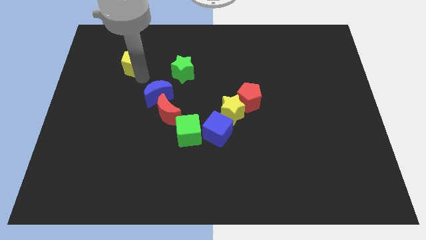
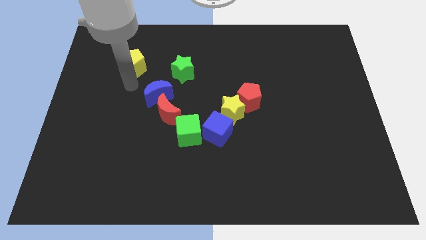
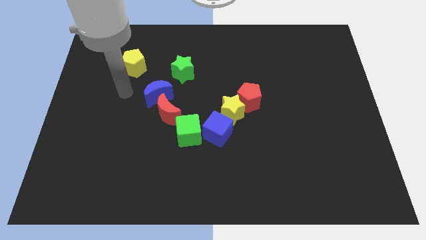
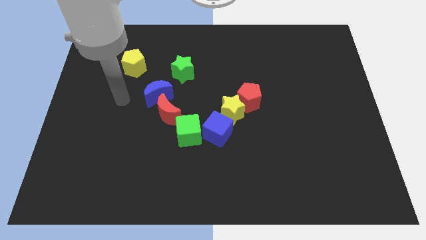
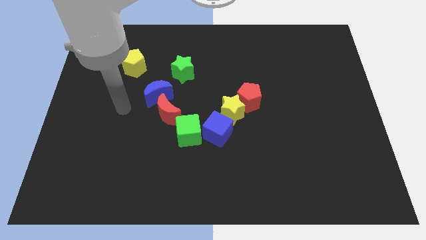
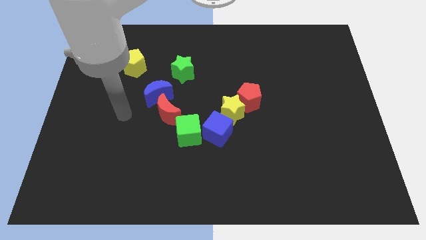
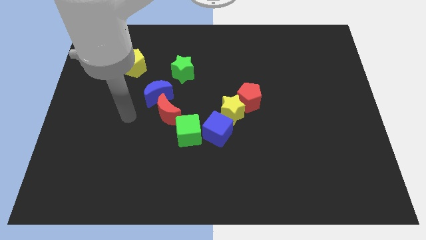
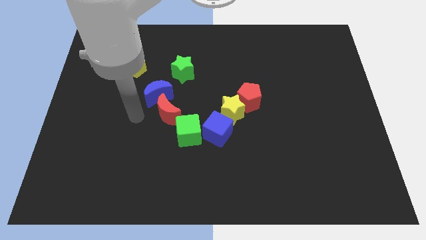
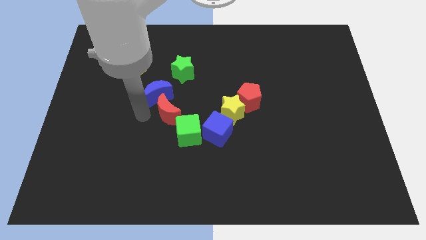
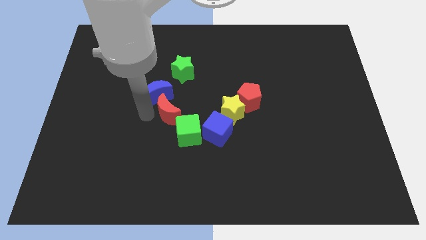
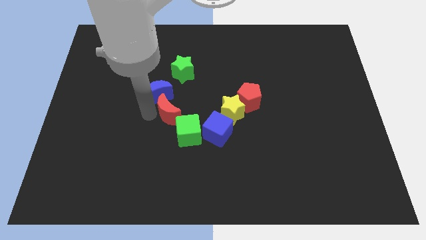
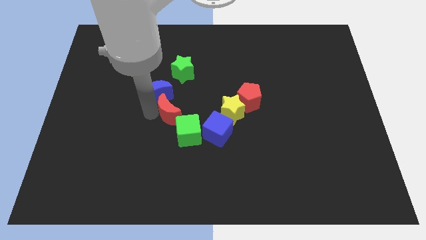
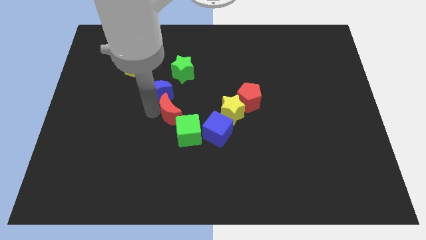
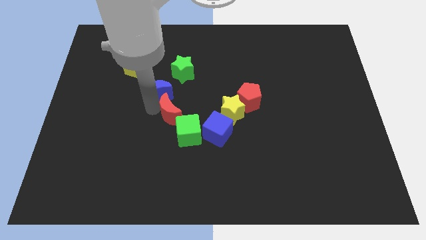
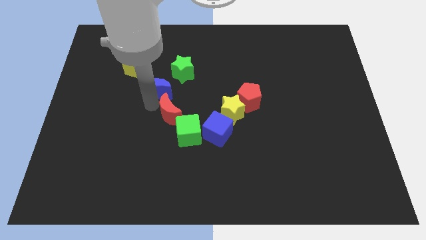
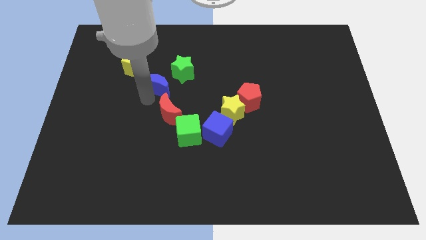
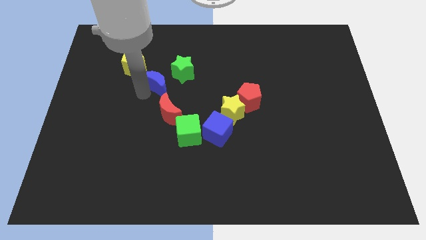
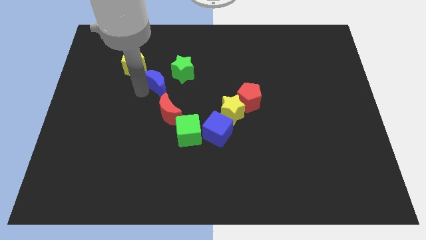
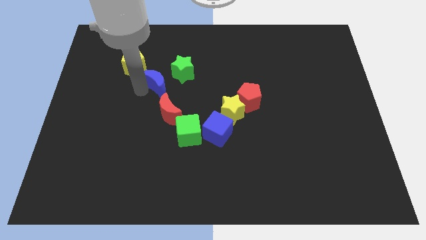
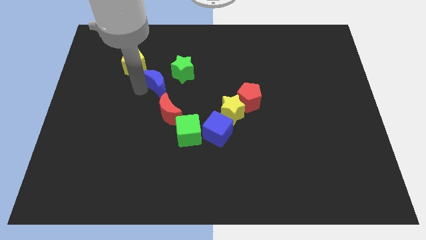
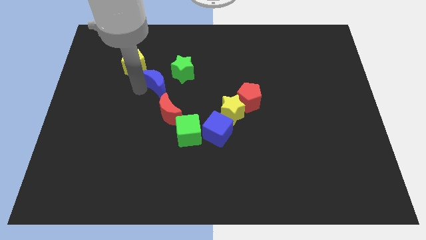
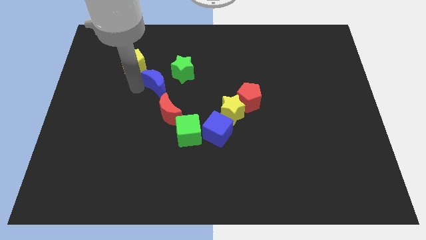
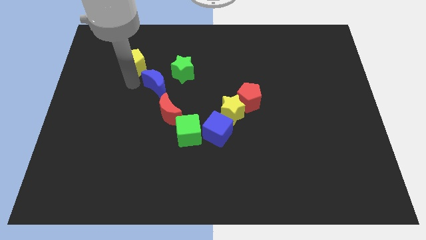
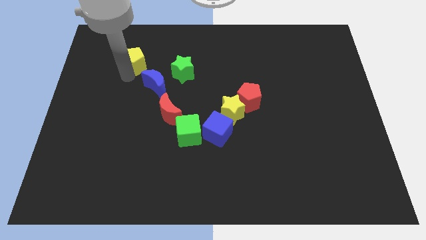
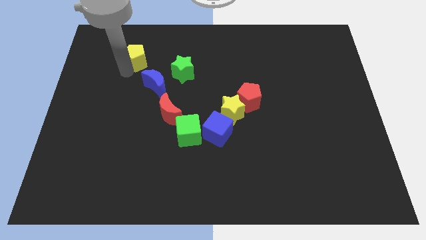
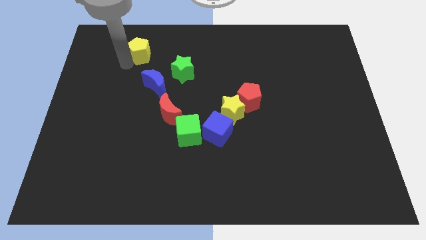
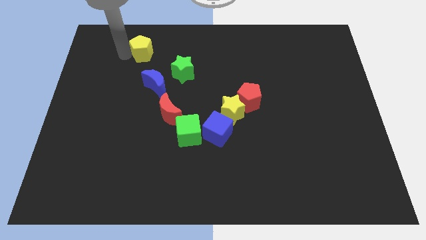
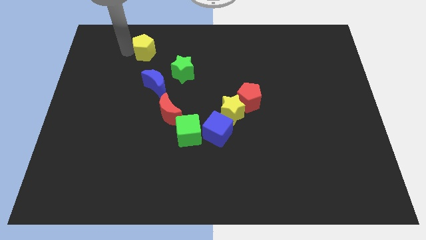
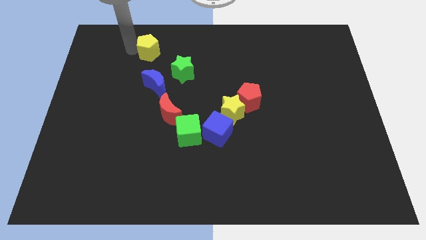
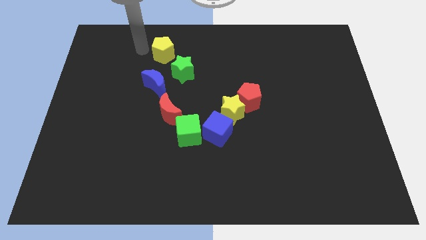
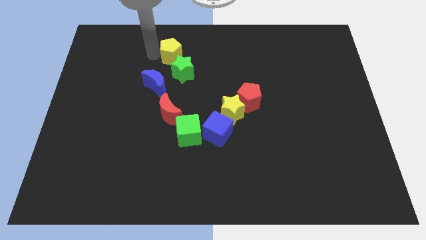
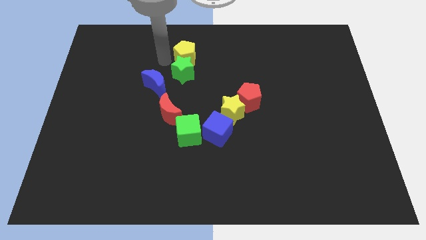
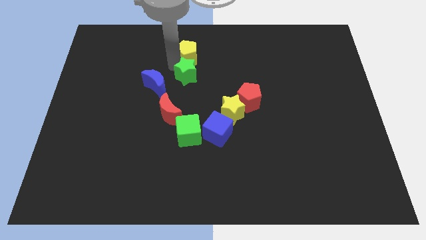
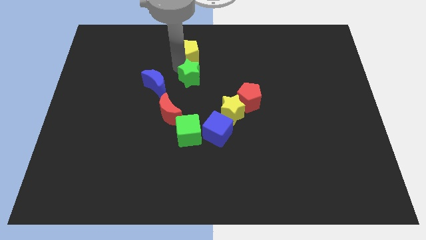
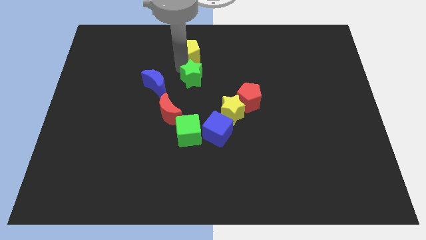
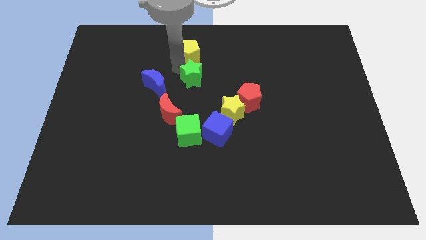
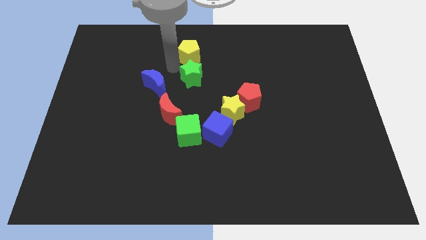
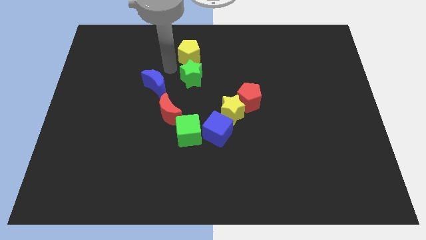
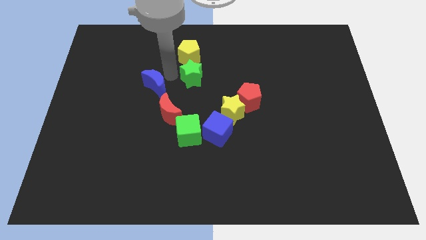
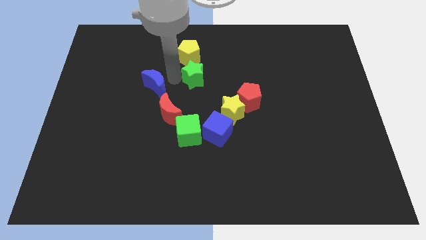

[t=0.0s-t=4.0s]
move the yellow pentagon above the green star

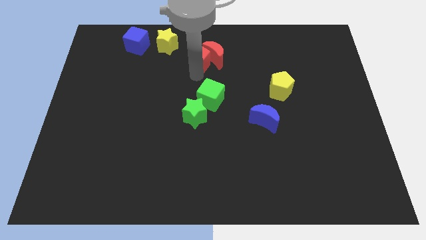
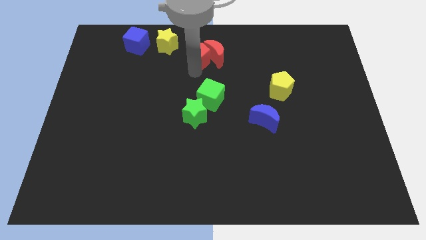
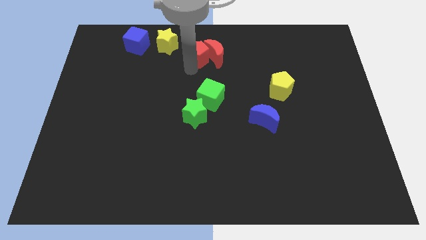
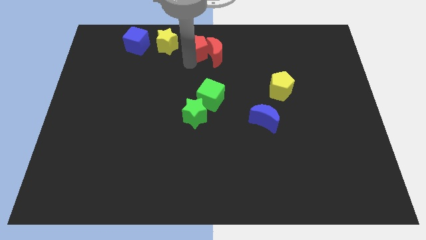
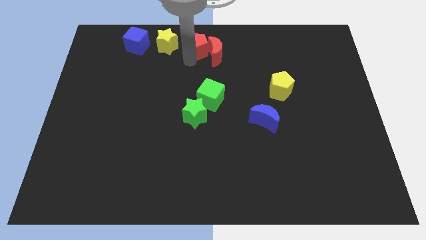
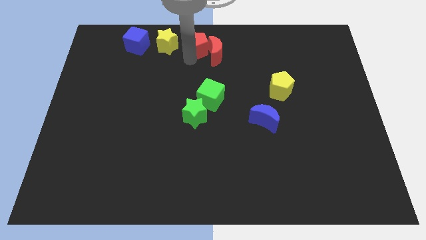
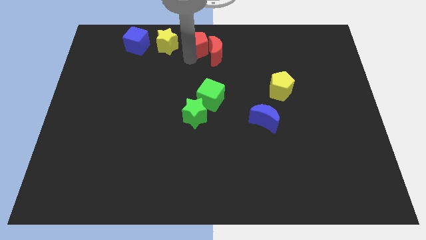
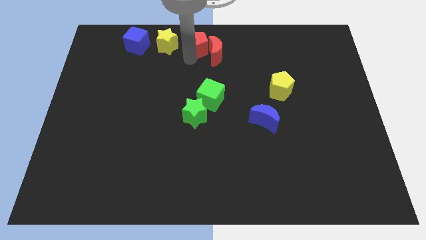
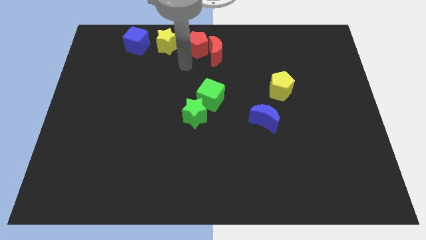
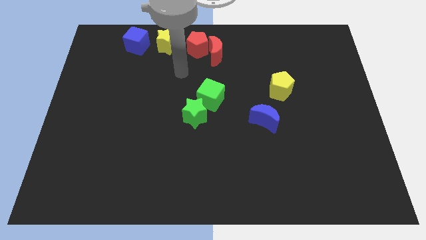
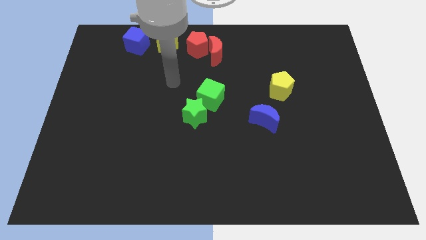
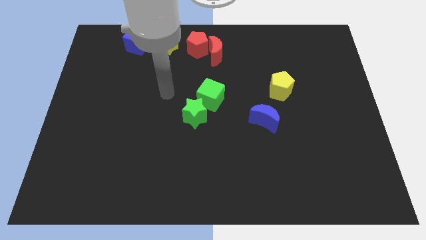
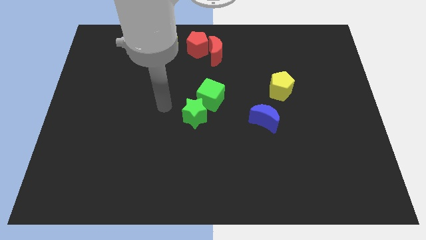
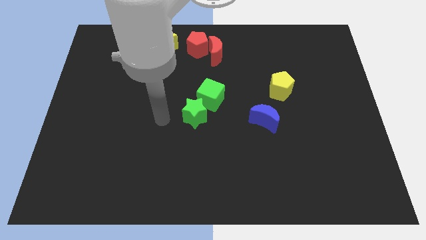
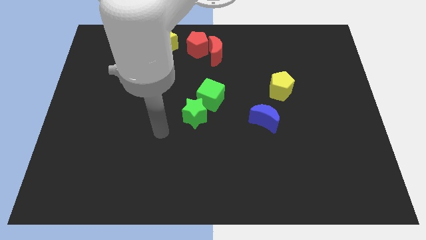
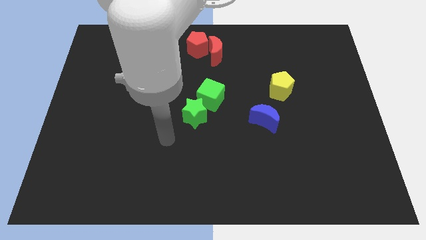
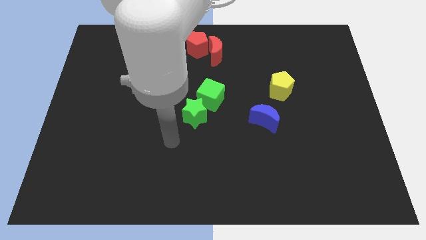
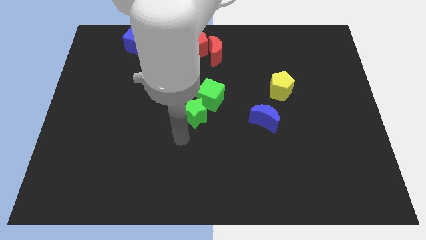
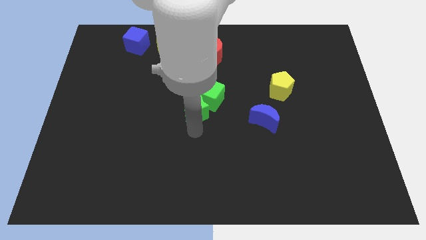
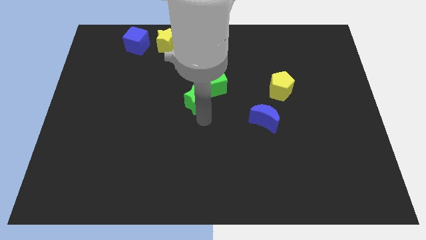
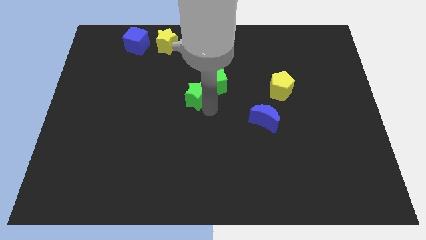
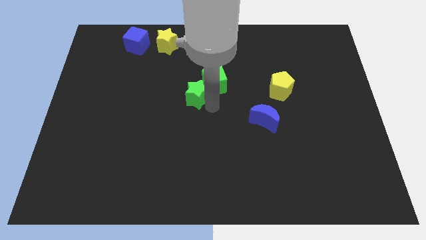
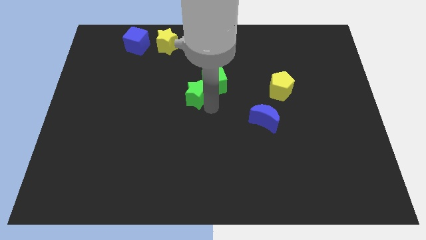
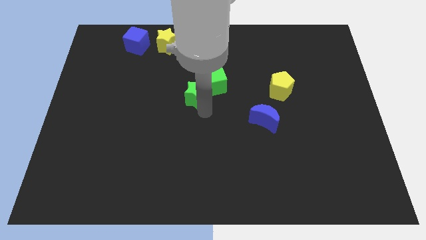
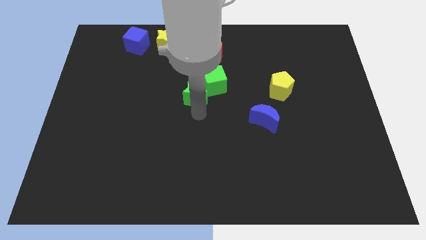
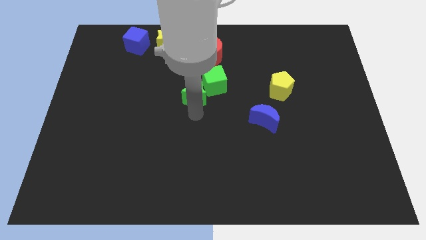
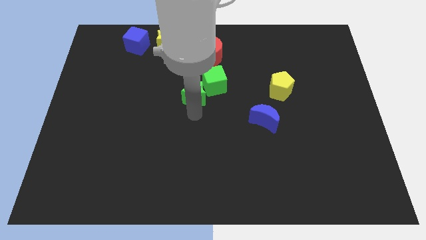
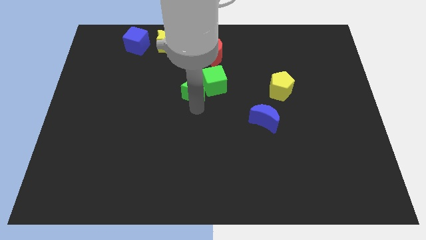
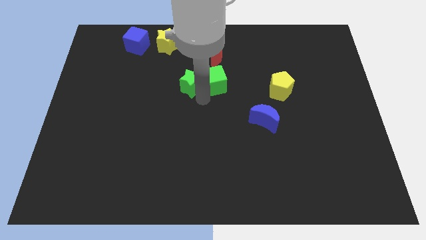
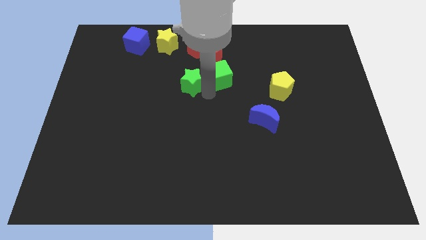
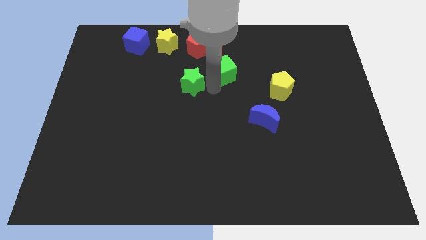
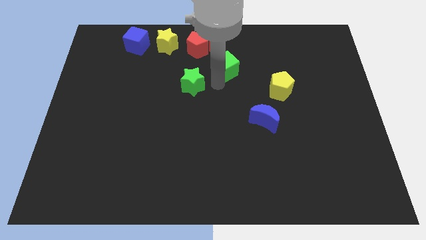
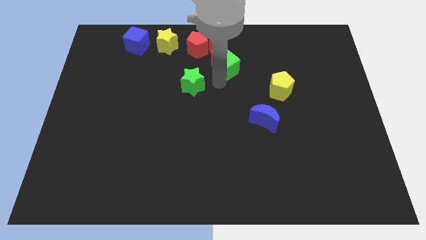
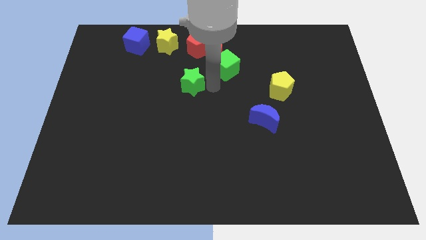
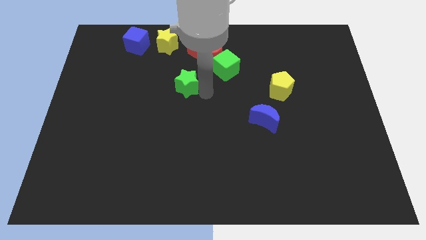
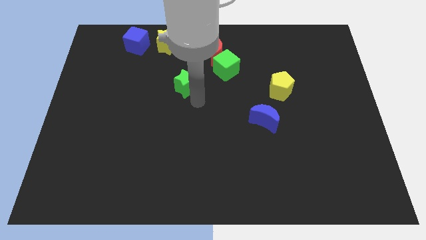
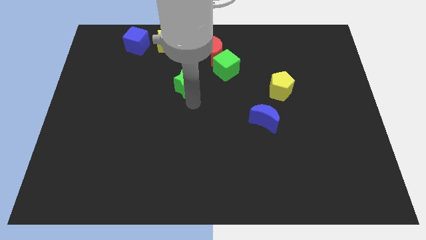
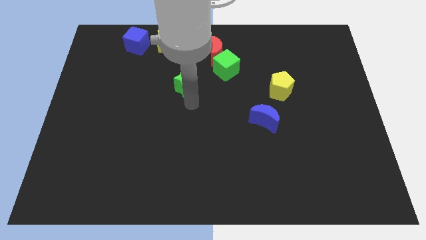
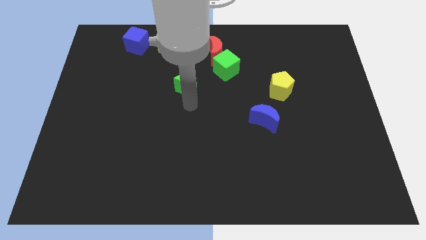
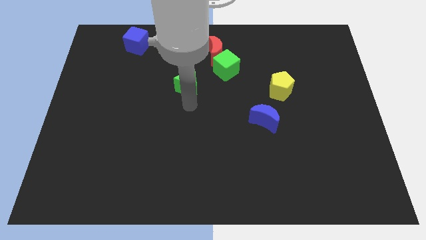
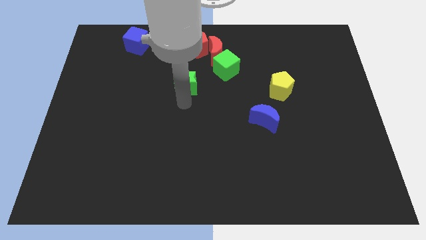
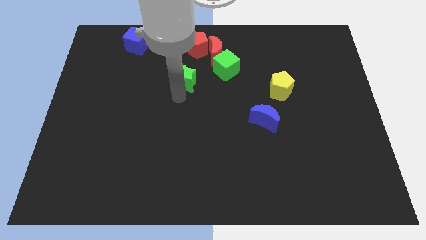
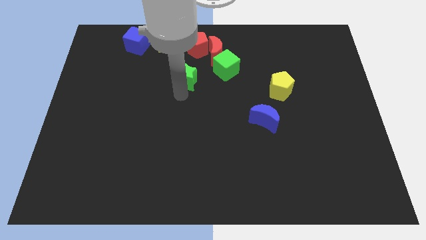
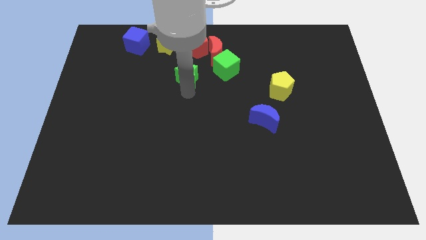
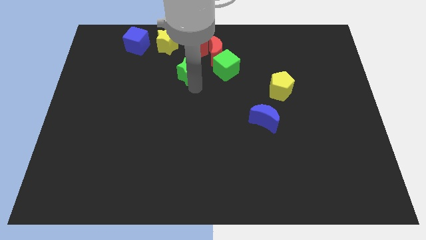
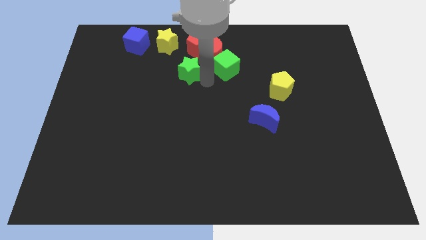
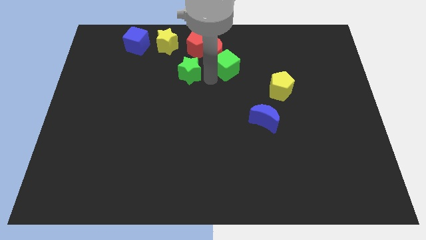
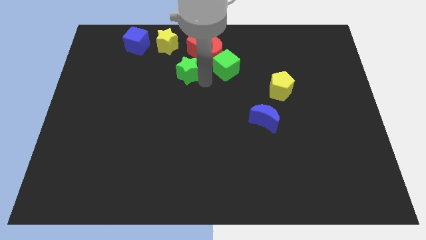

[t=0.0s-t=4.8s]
separate the green star from the green cube

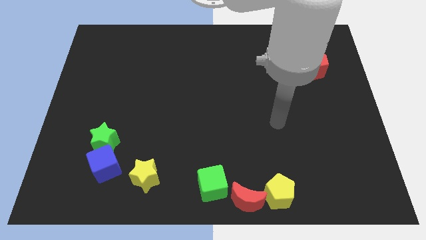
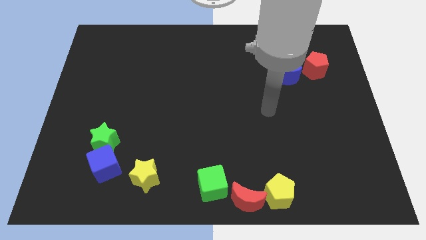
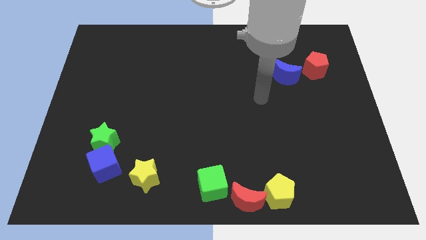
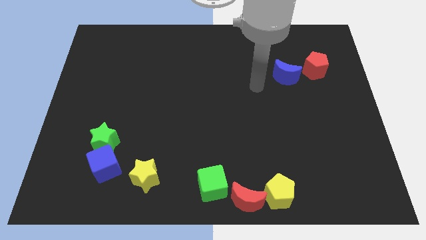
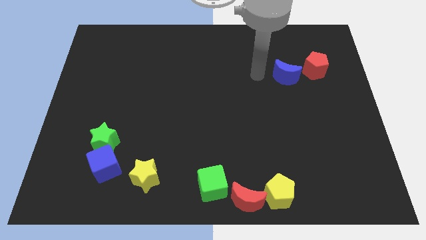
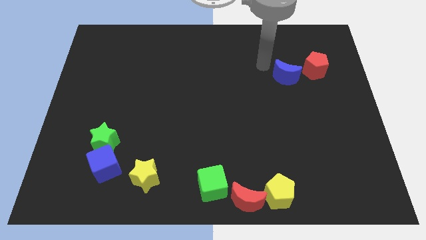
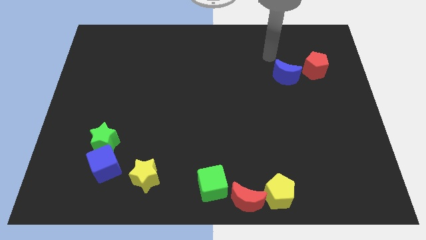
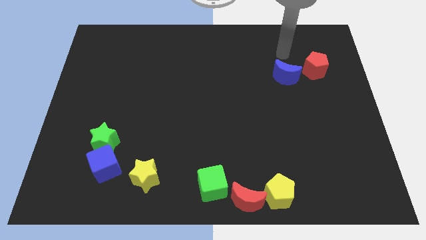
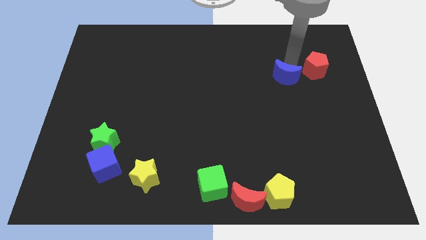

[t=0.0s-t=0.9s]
move the arm to the top of the blue crescent
